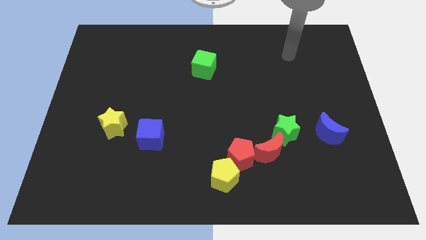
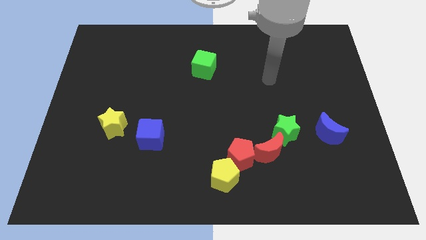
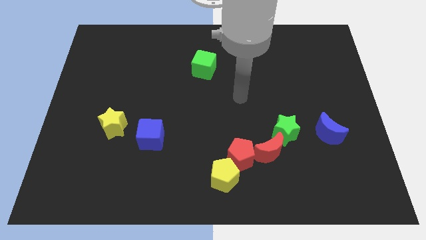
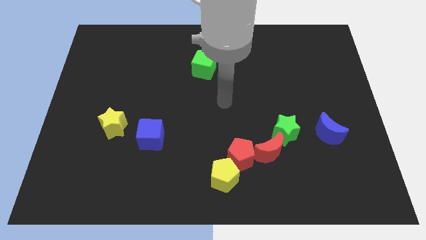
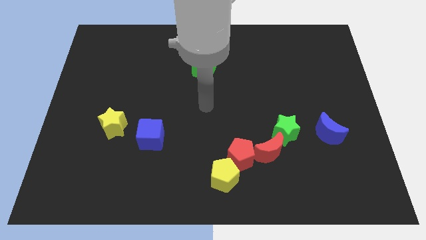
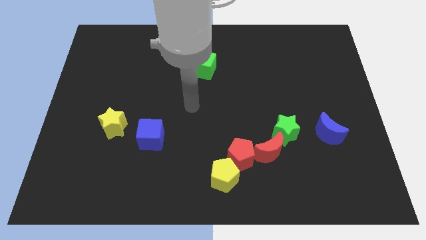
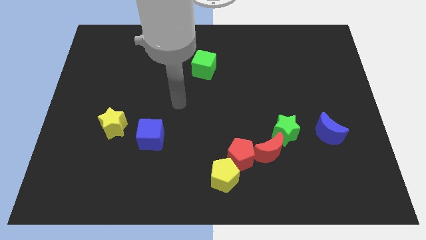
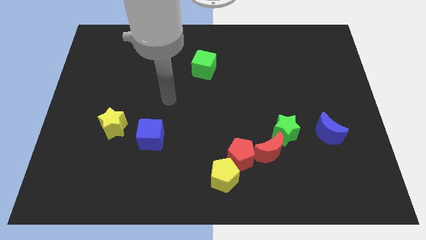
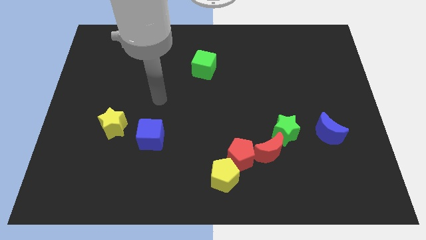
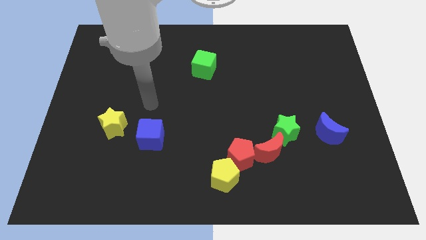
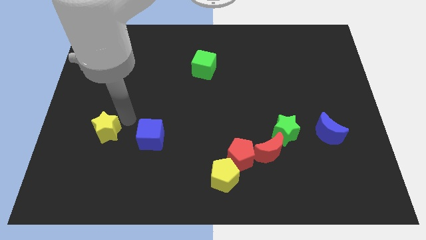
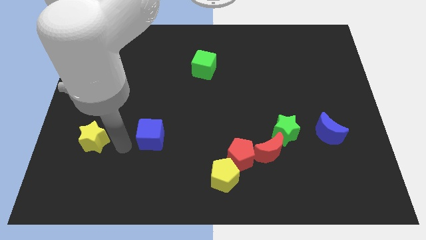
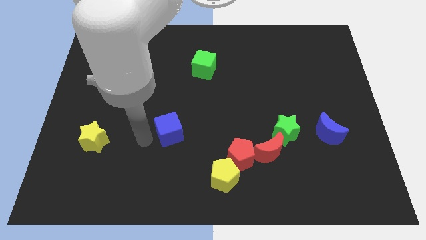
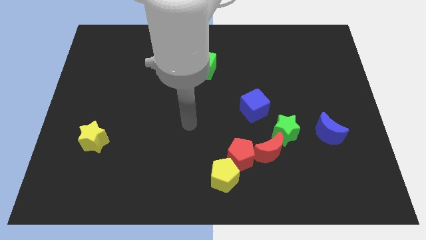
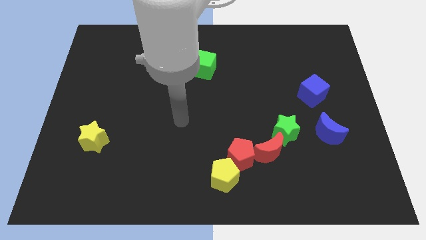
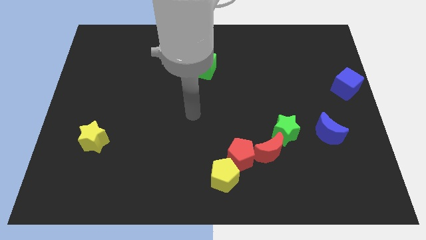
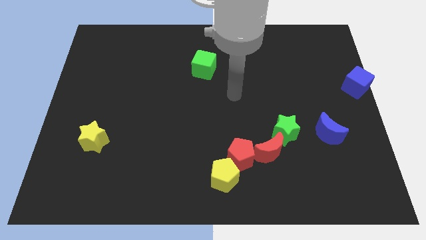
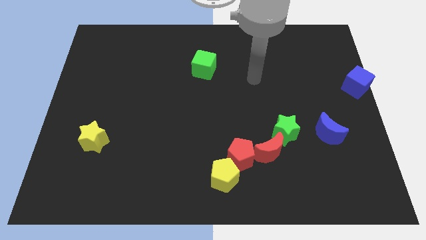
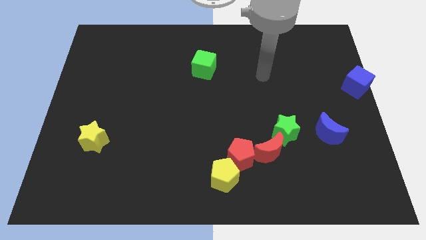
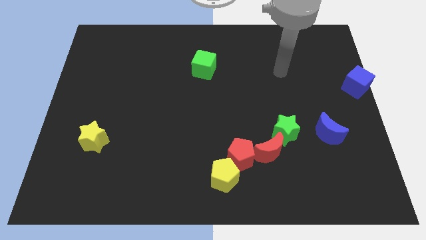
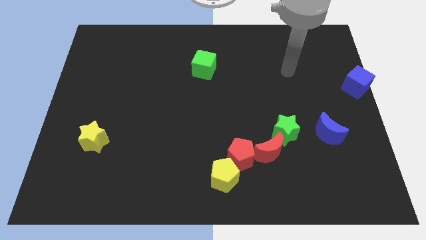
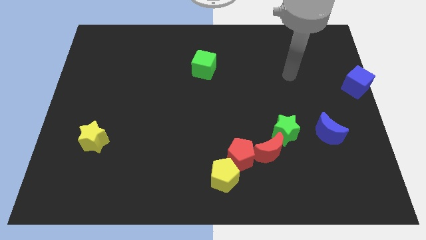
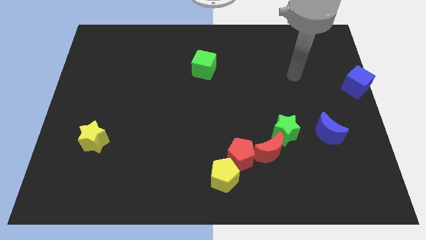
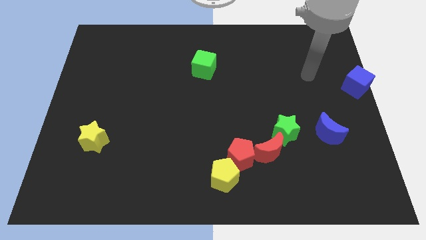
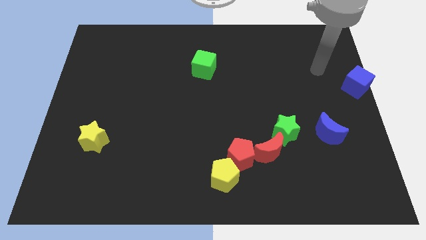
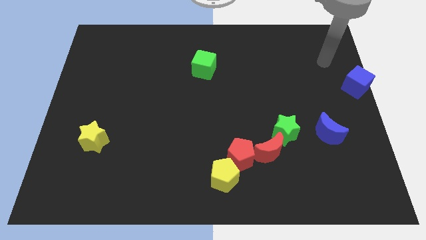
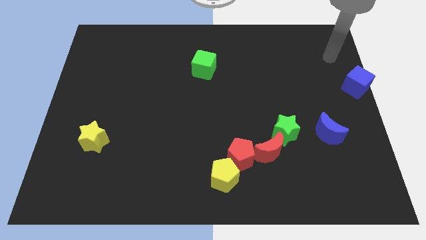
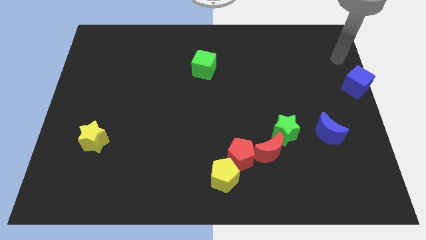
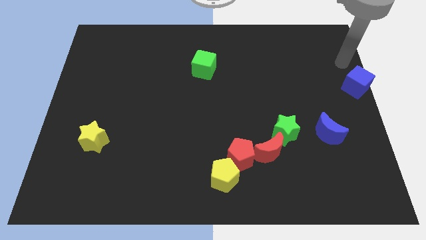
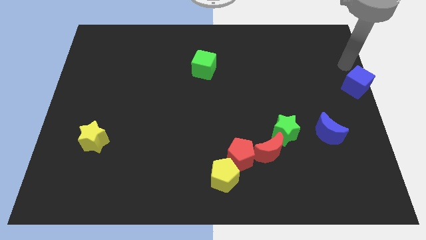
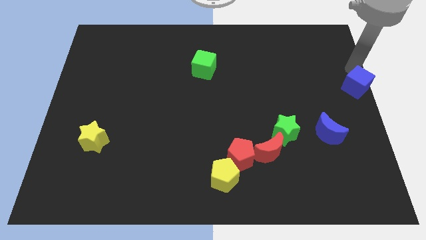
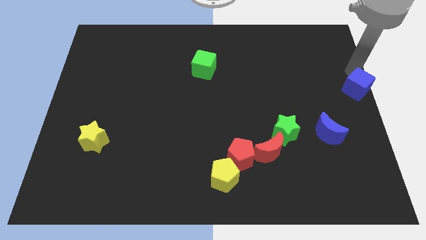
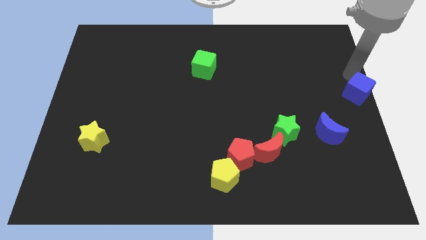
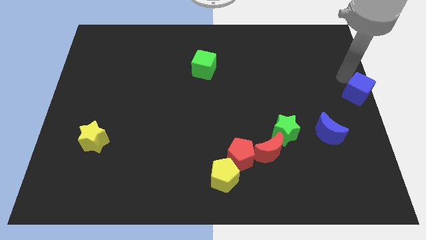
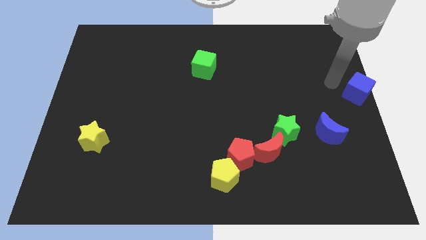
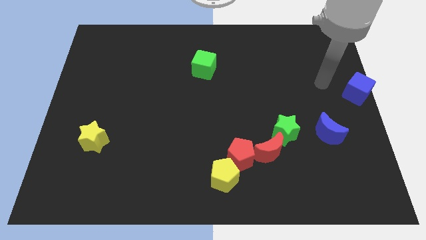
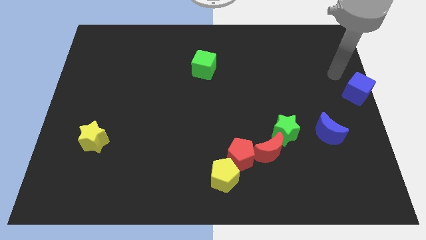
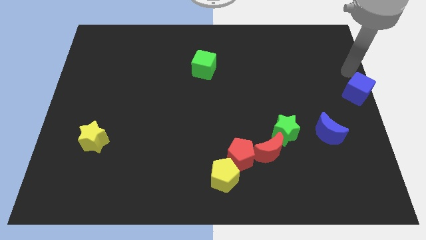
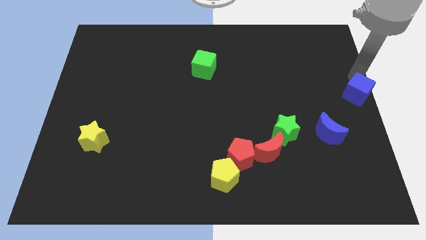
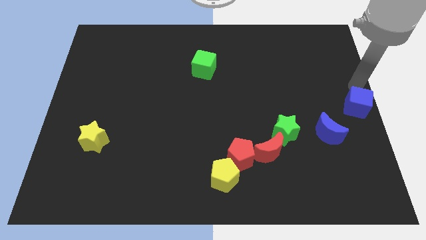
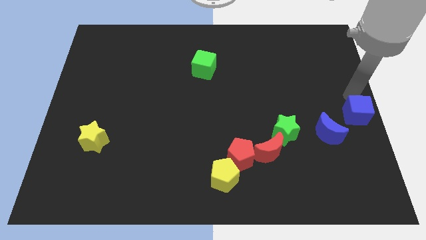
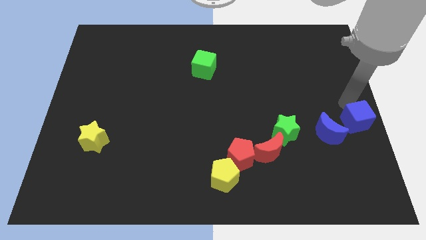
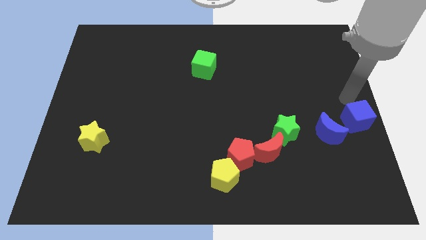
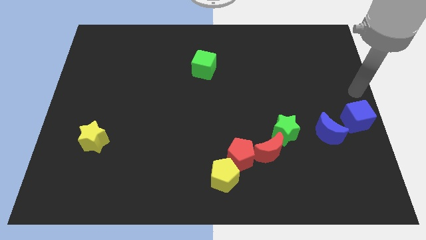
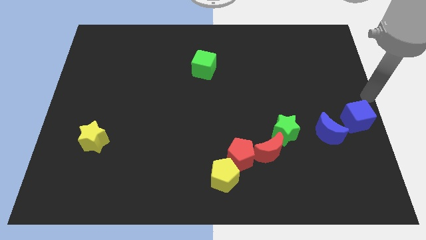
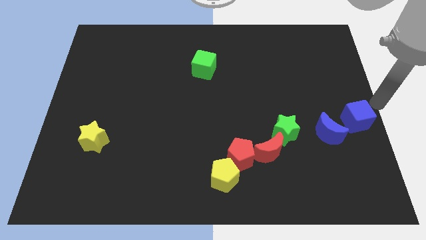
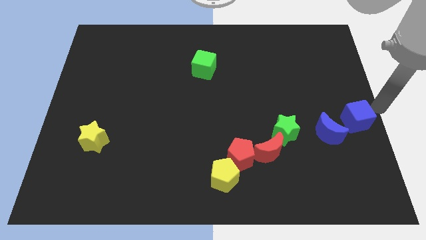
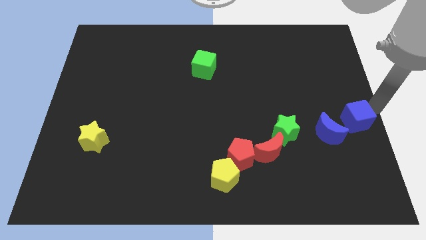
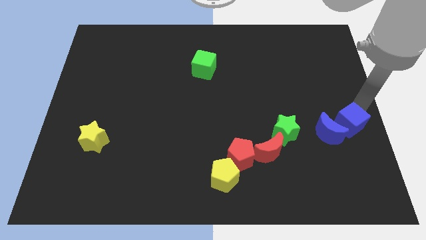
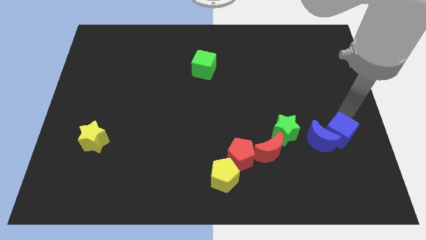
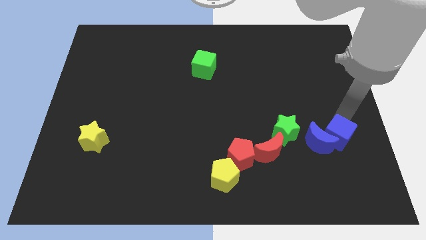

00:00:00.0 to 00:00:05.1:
put the blue cube next to the blue moon

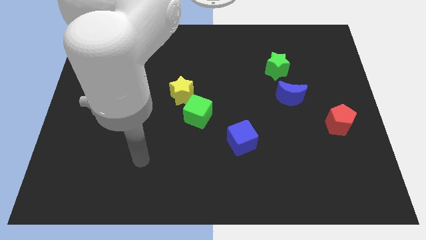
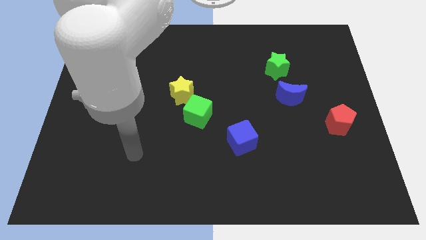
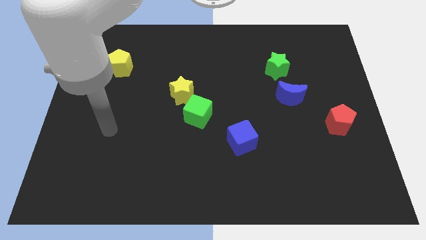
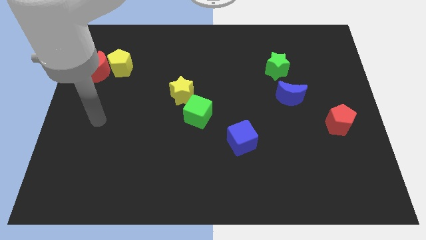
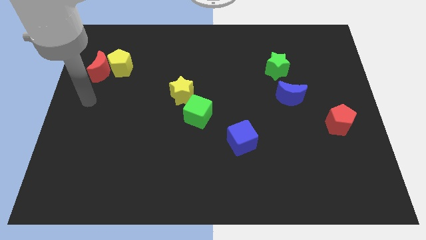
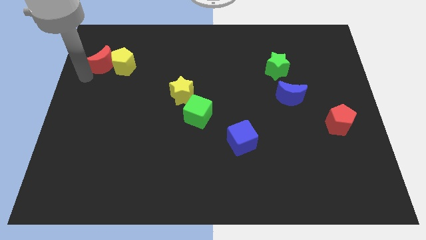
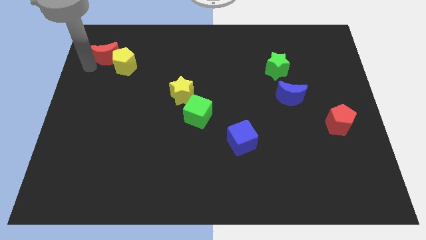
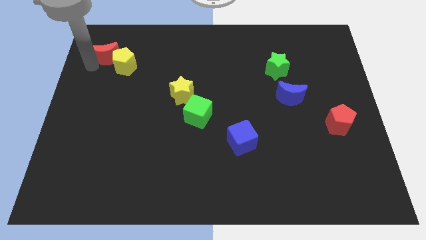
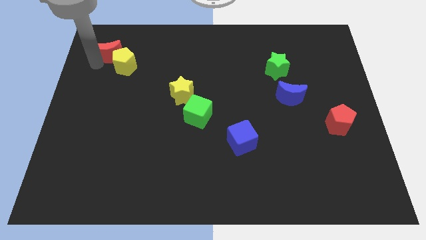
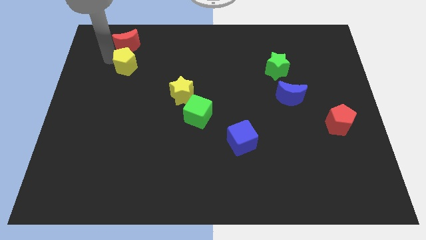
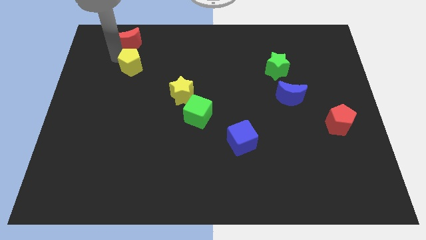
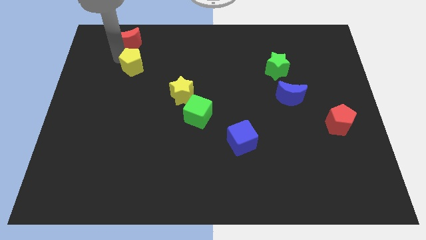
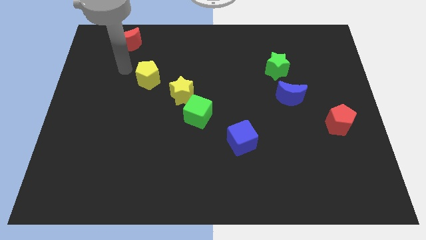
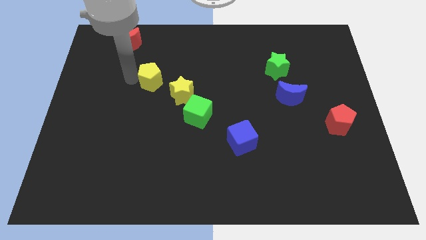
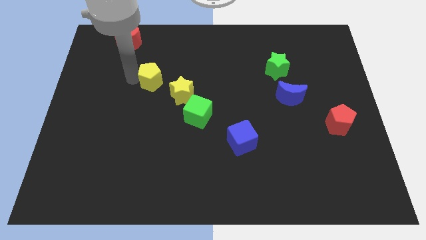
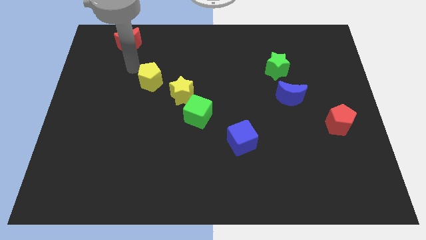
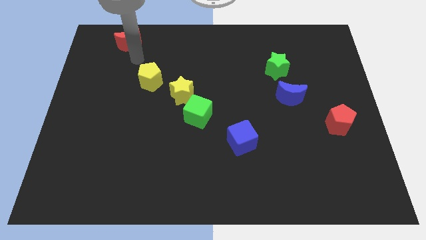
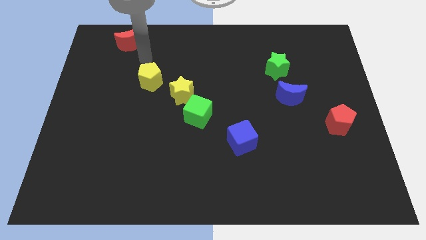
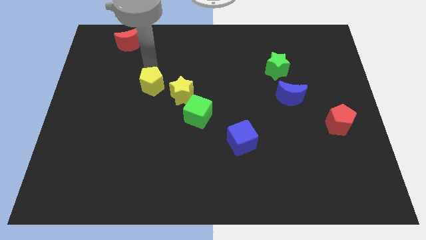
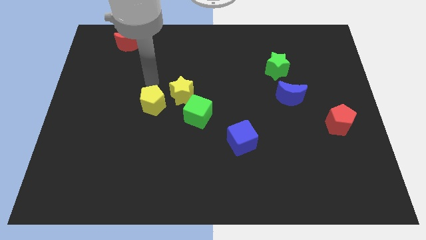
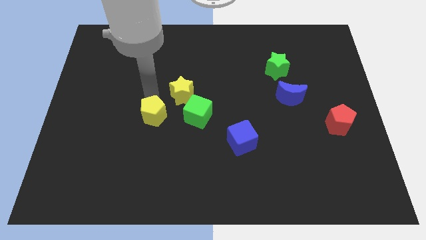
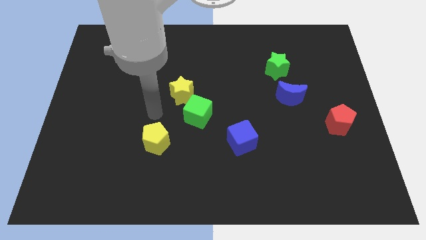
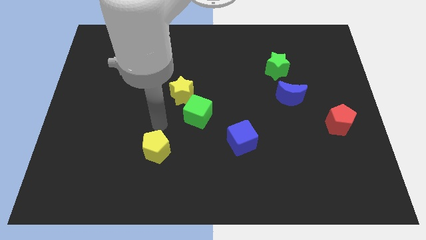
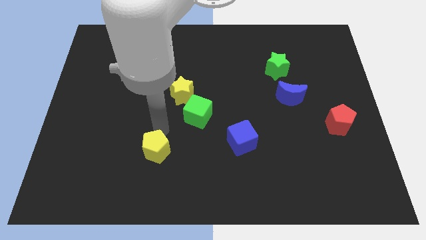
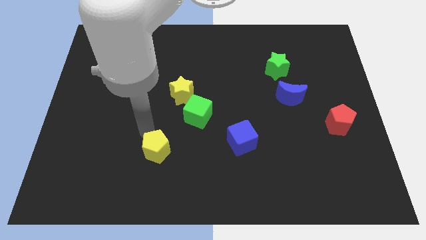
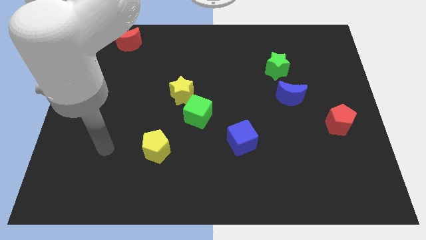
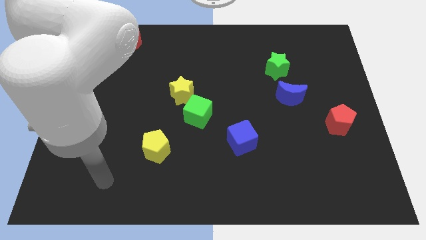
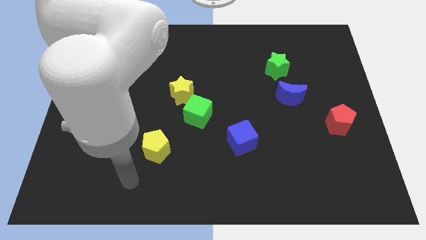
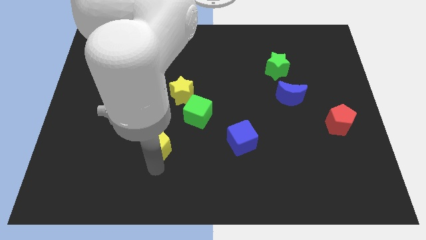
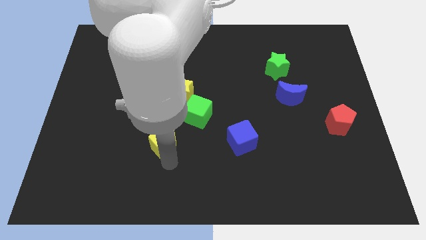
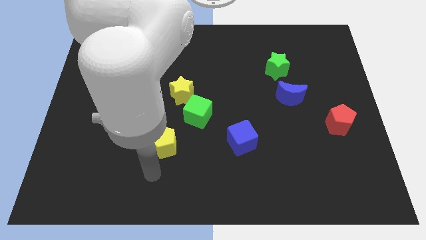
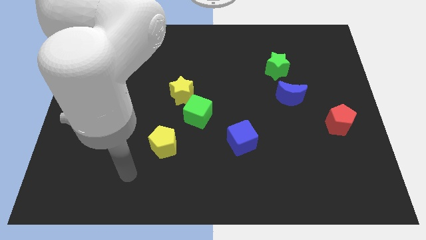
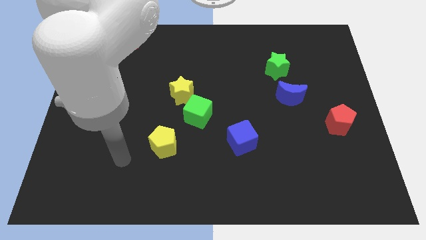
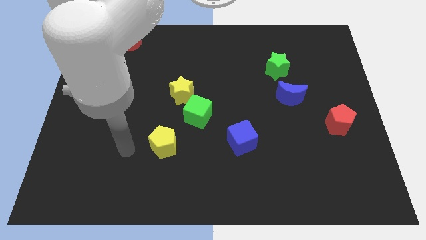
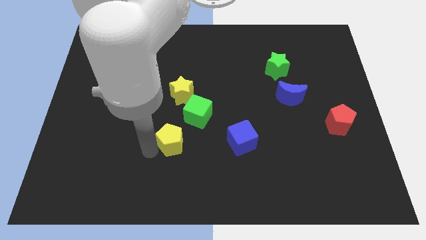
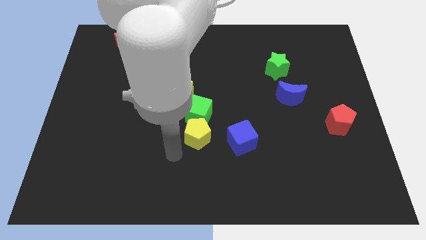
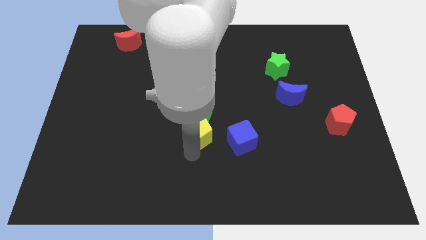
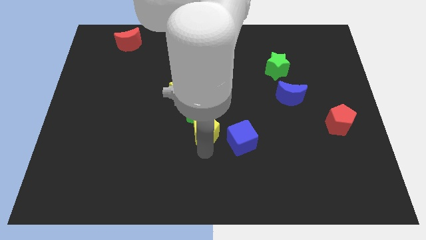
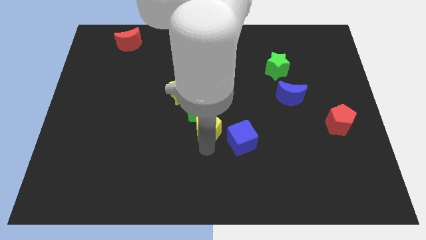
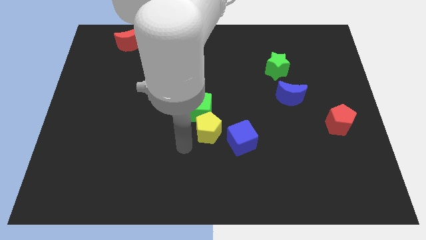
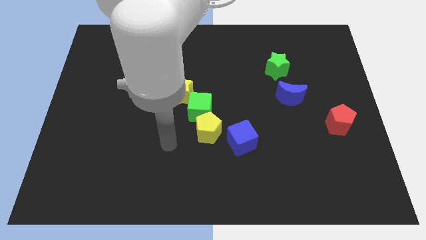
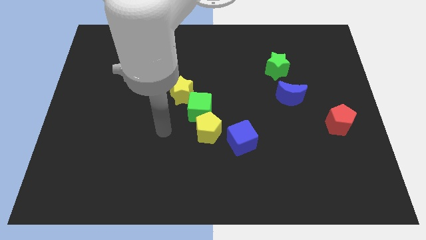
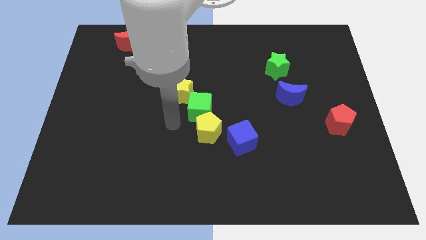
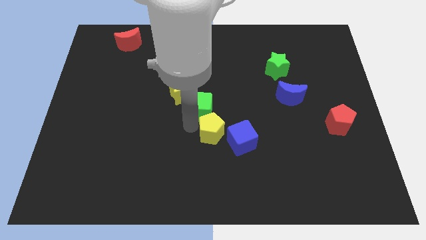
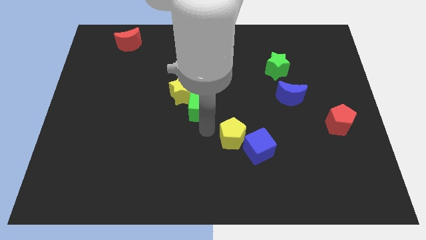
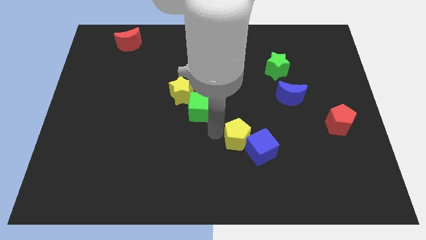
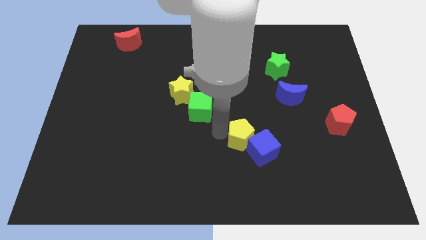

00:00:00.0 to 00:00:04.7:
put the yellow pentagon next to the blue cube
